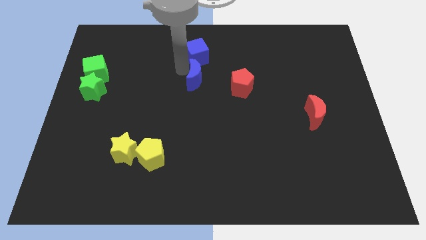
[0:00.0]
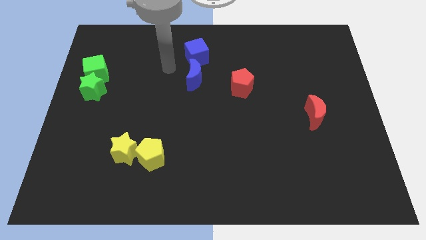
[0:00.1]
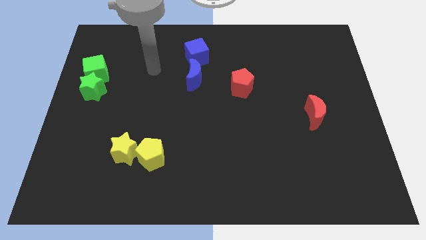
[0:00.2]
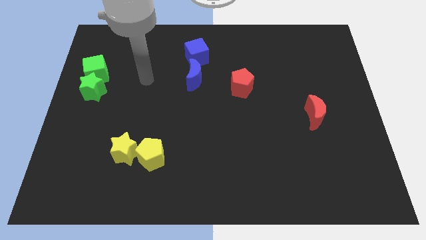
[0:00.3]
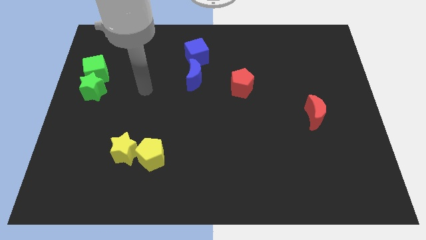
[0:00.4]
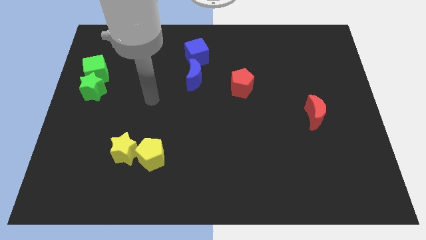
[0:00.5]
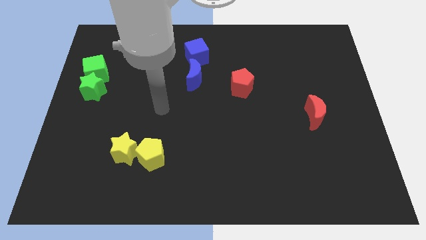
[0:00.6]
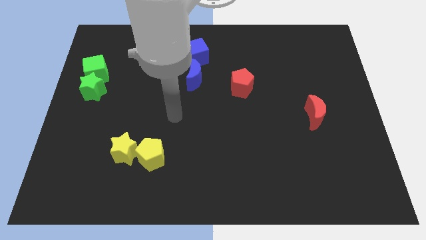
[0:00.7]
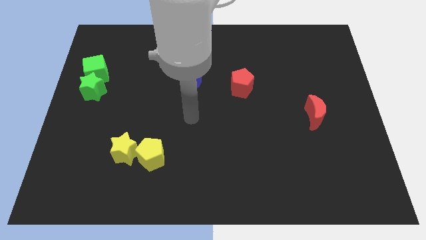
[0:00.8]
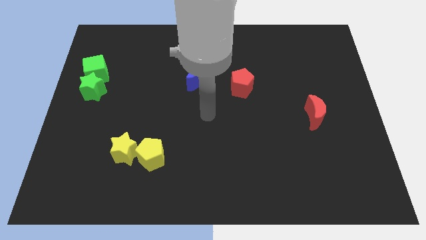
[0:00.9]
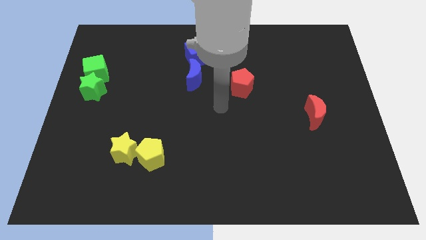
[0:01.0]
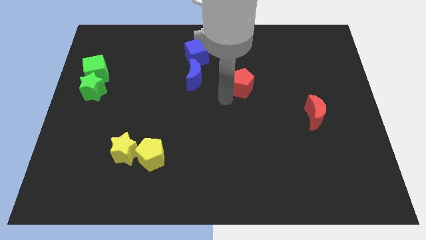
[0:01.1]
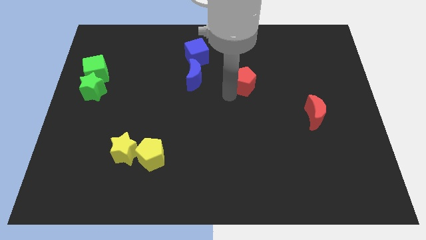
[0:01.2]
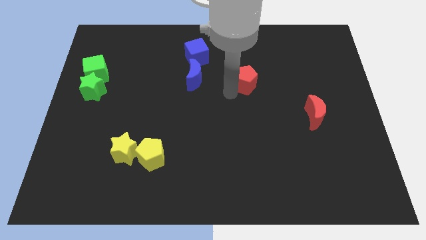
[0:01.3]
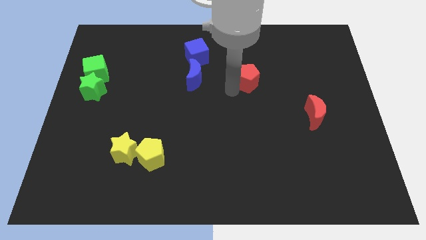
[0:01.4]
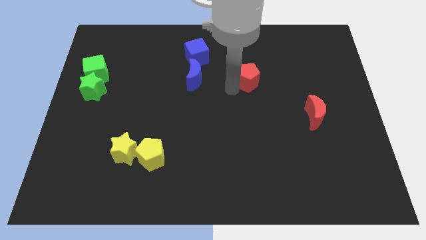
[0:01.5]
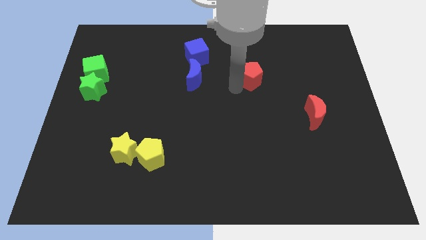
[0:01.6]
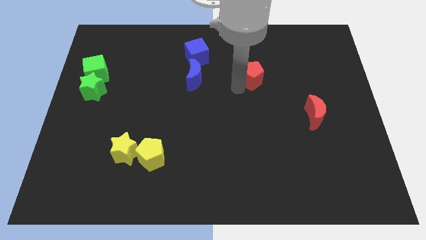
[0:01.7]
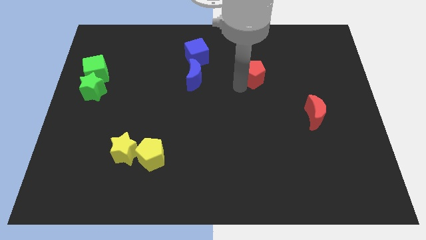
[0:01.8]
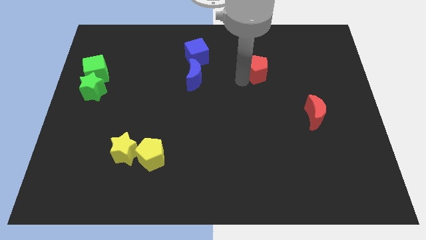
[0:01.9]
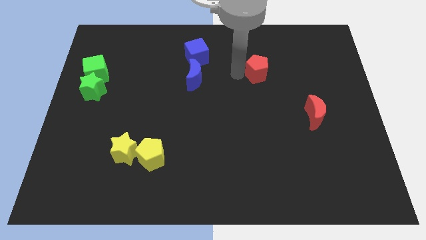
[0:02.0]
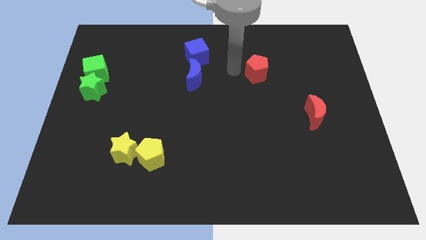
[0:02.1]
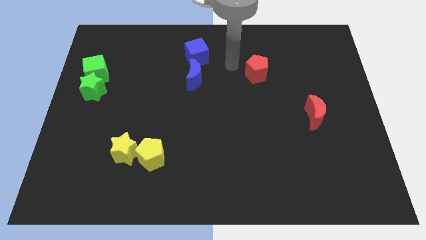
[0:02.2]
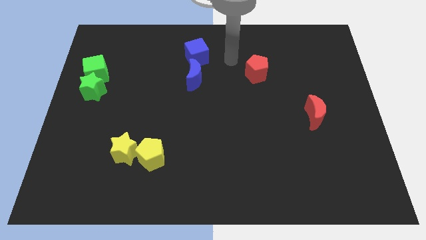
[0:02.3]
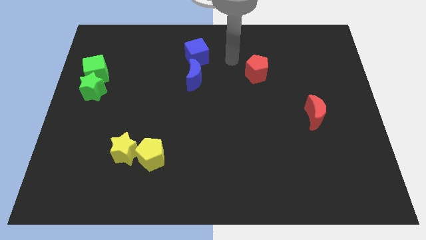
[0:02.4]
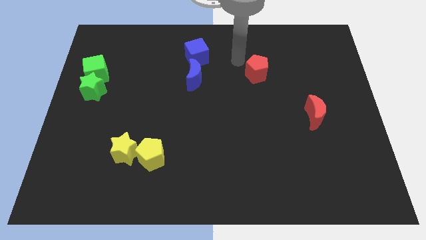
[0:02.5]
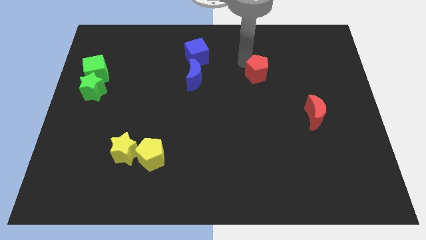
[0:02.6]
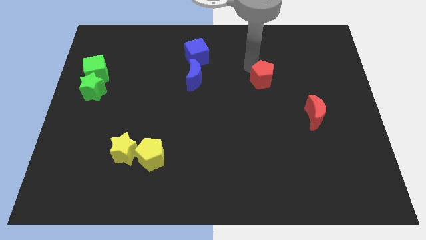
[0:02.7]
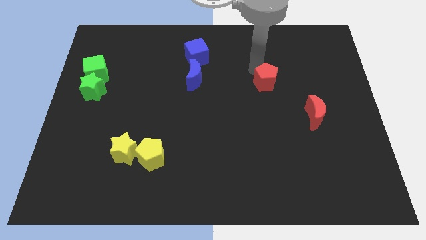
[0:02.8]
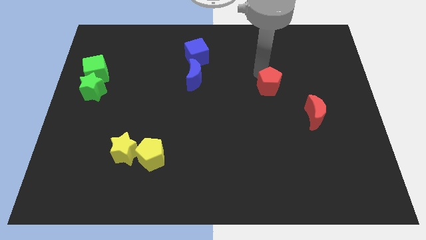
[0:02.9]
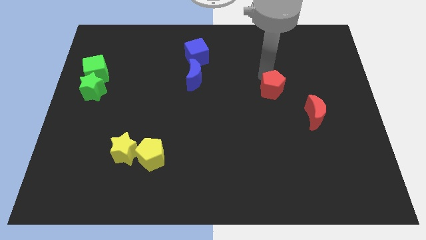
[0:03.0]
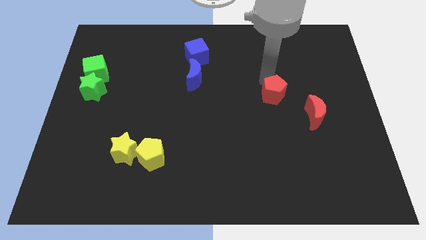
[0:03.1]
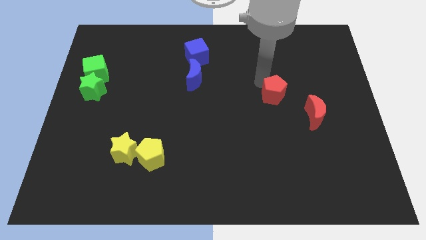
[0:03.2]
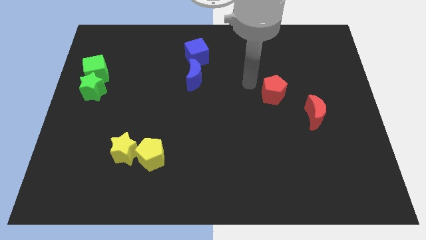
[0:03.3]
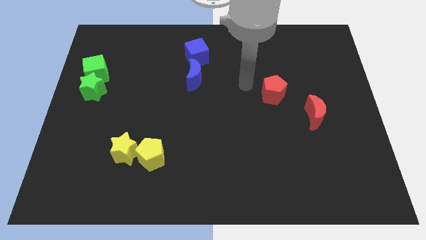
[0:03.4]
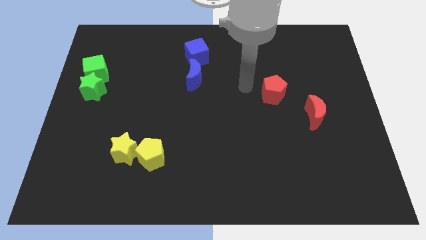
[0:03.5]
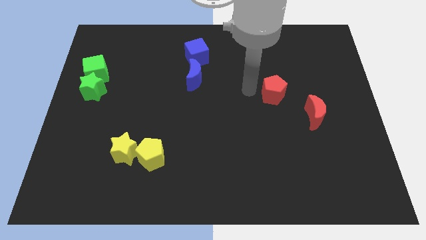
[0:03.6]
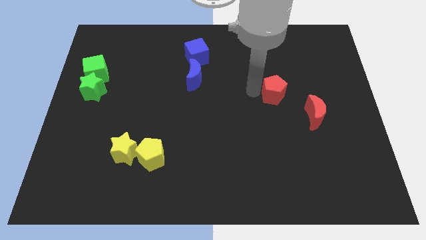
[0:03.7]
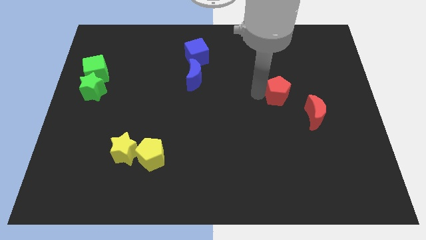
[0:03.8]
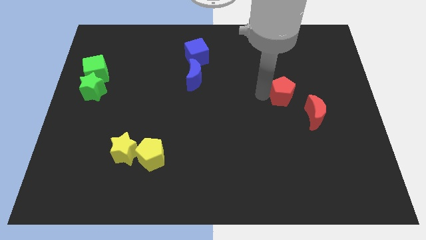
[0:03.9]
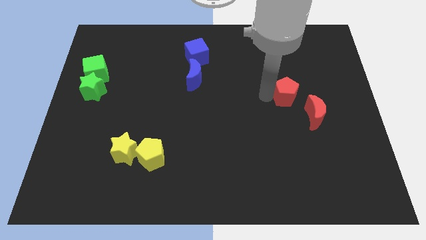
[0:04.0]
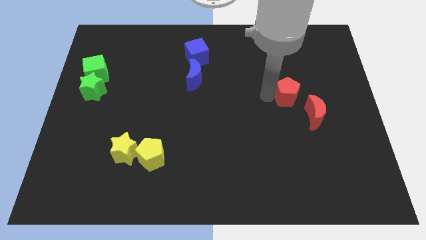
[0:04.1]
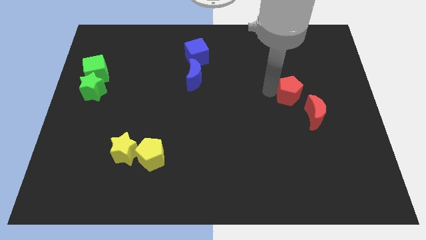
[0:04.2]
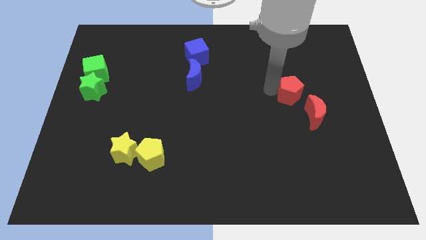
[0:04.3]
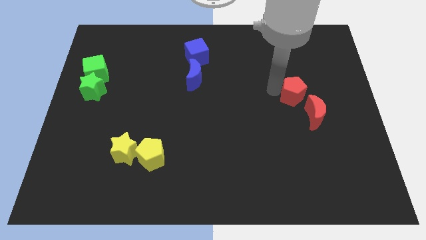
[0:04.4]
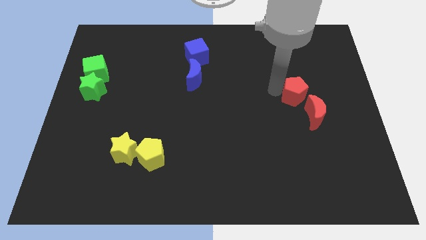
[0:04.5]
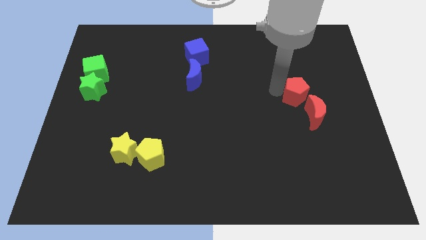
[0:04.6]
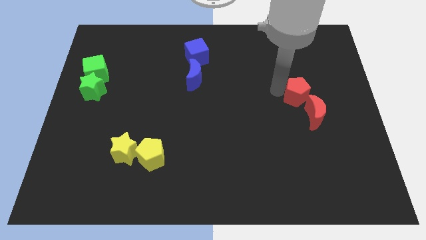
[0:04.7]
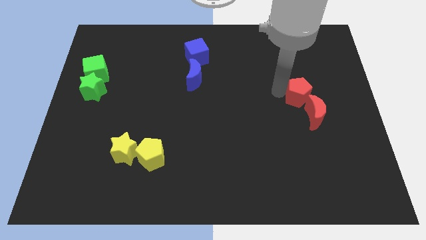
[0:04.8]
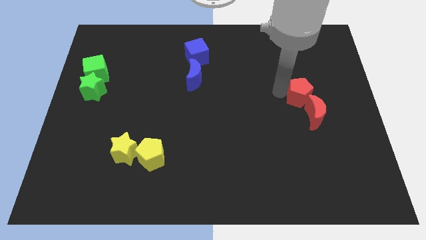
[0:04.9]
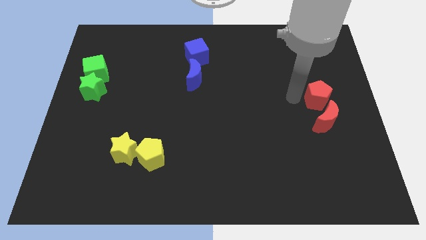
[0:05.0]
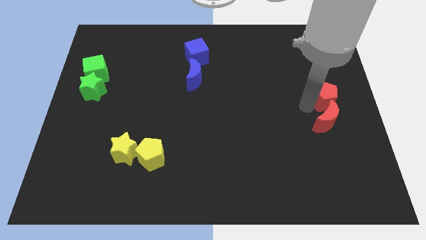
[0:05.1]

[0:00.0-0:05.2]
move the red pentagon to the top of the red crescent

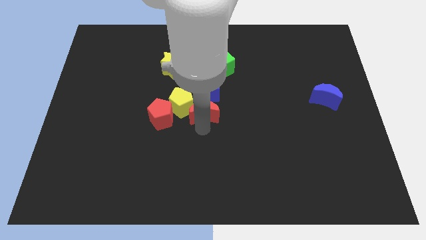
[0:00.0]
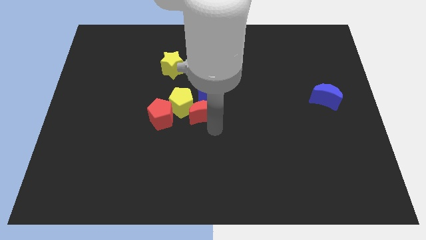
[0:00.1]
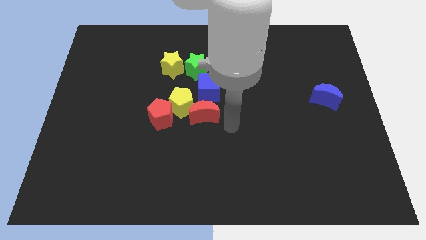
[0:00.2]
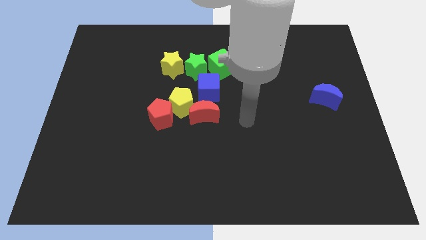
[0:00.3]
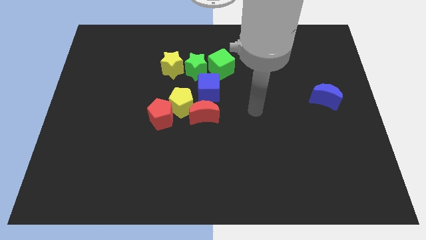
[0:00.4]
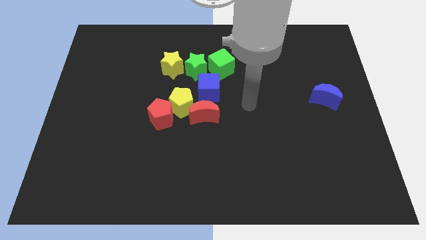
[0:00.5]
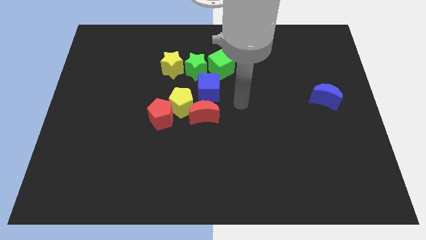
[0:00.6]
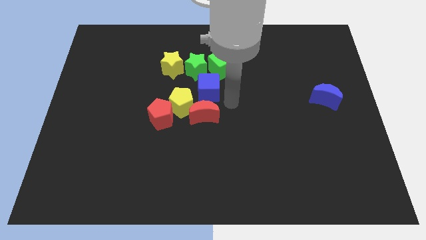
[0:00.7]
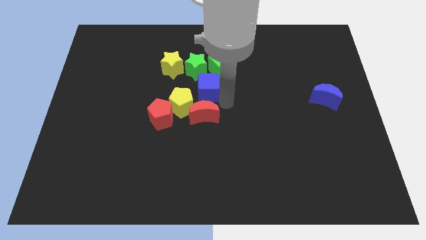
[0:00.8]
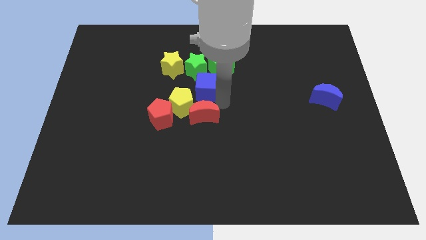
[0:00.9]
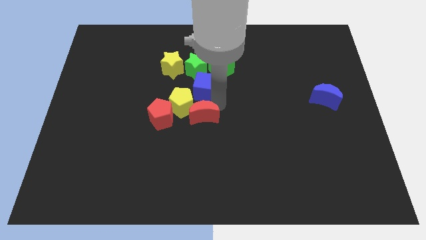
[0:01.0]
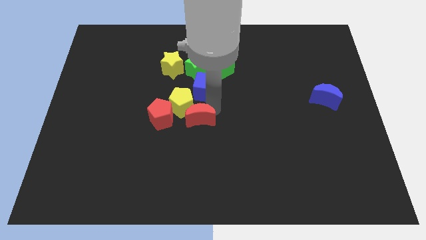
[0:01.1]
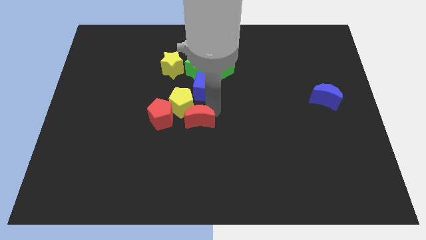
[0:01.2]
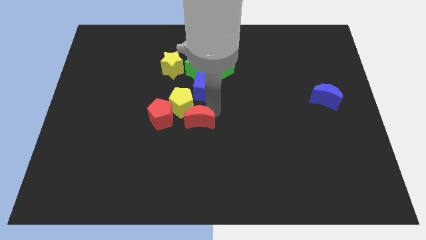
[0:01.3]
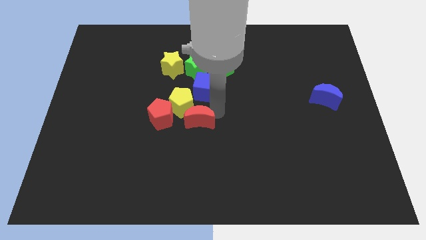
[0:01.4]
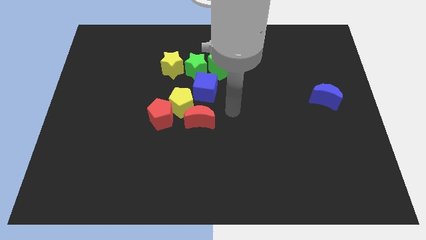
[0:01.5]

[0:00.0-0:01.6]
separate red moon and blue cube

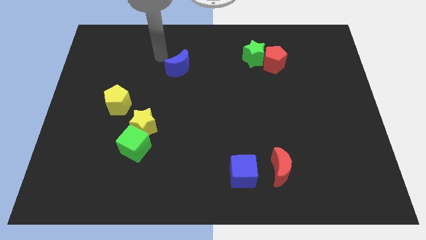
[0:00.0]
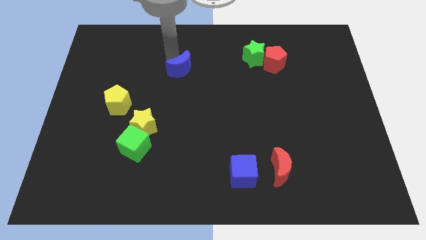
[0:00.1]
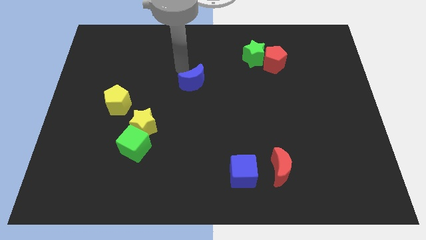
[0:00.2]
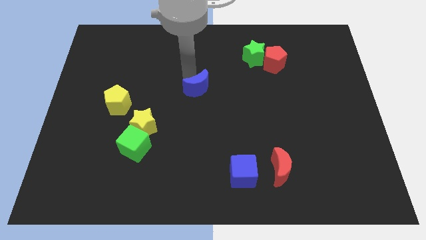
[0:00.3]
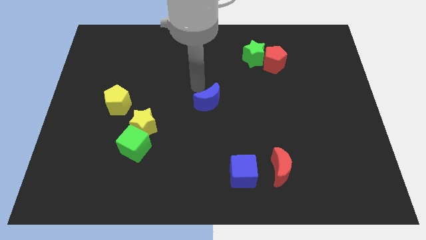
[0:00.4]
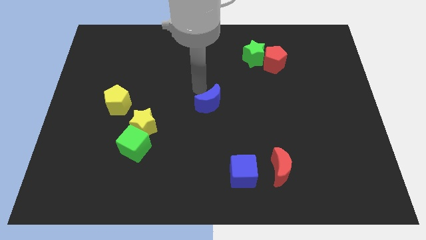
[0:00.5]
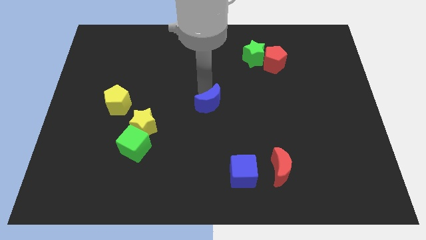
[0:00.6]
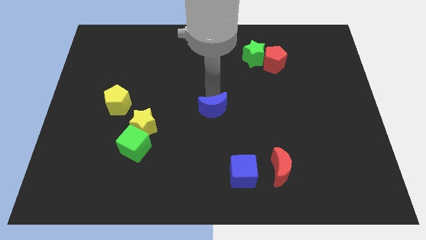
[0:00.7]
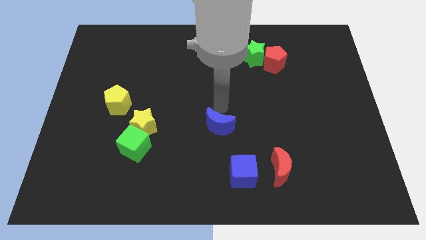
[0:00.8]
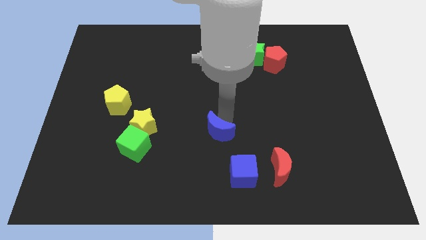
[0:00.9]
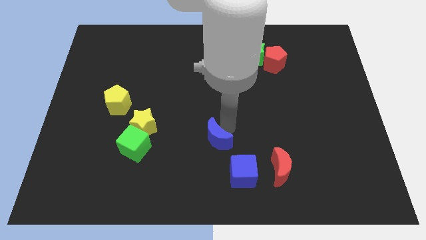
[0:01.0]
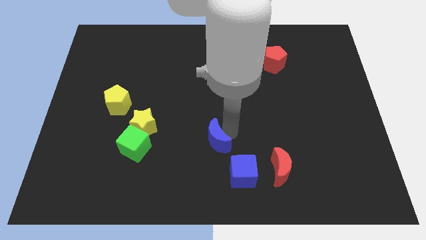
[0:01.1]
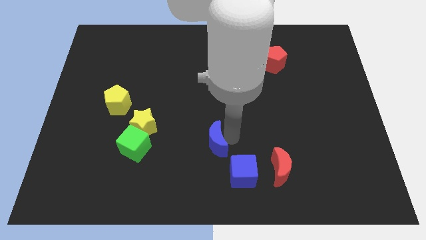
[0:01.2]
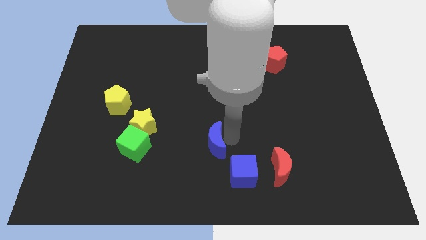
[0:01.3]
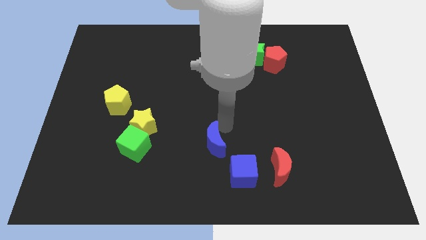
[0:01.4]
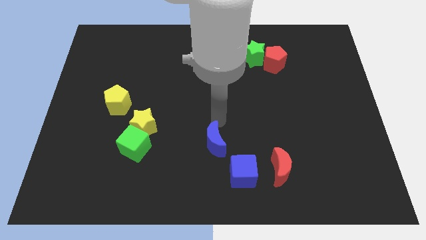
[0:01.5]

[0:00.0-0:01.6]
push the blue moon to the top left side of the blue cube

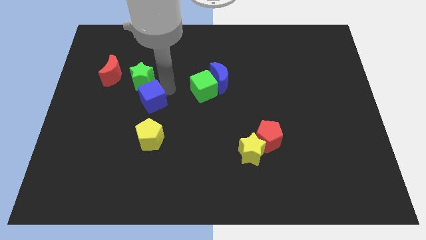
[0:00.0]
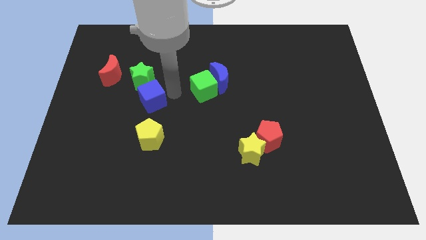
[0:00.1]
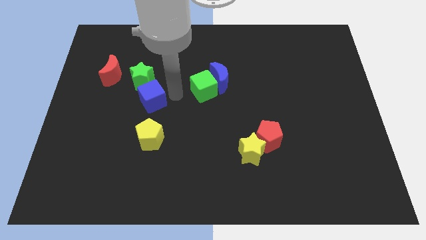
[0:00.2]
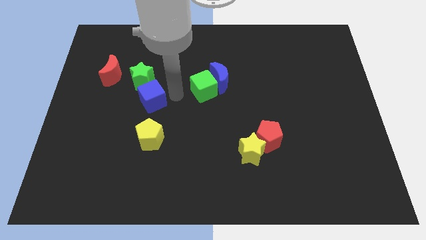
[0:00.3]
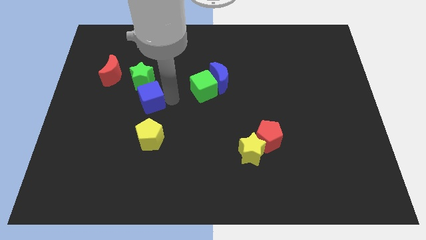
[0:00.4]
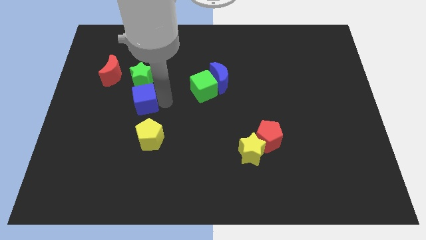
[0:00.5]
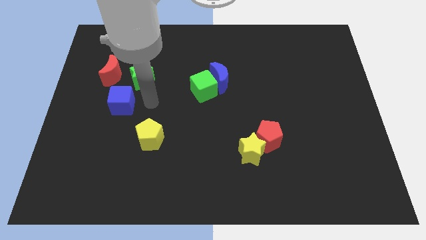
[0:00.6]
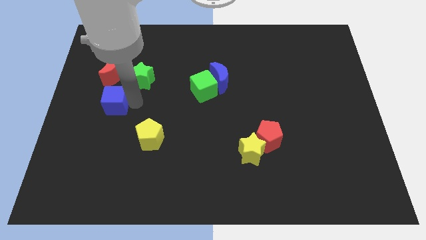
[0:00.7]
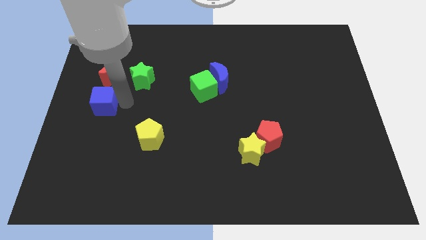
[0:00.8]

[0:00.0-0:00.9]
move blue cube below red moon
